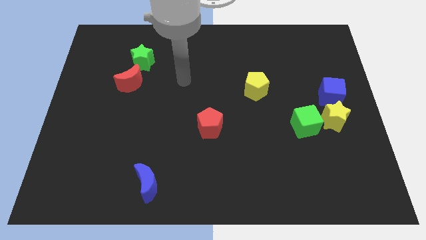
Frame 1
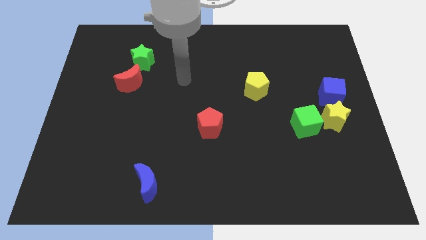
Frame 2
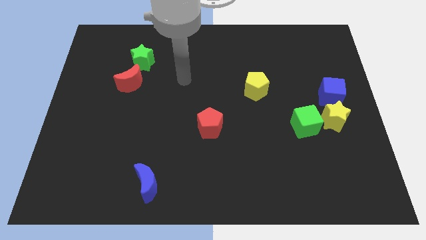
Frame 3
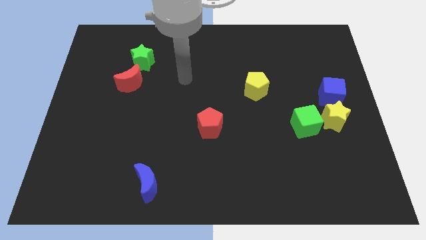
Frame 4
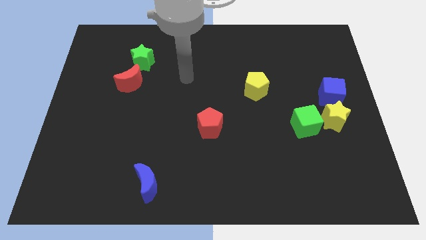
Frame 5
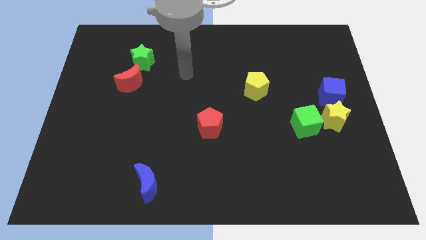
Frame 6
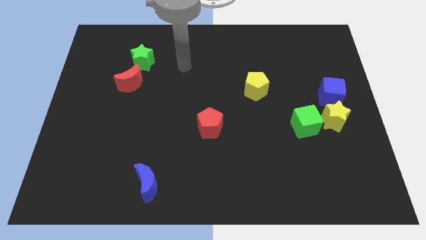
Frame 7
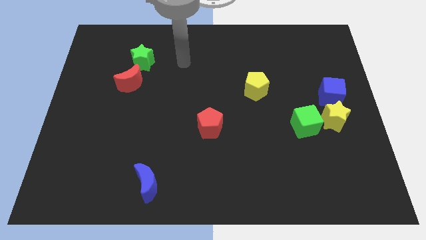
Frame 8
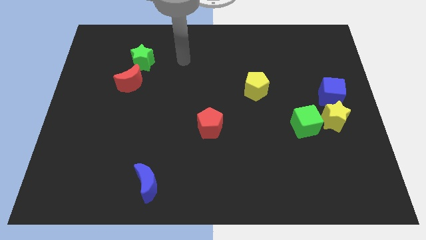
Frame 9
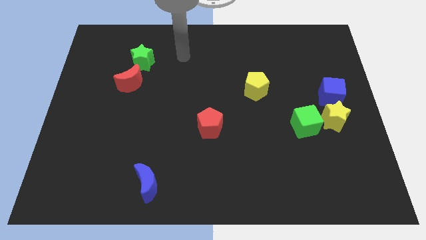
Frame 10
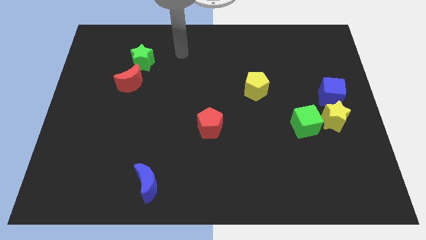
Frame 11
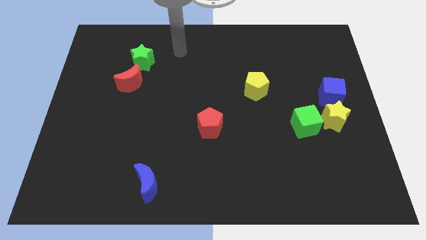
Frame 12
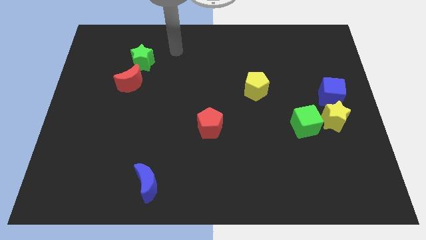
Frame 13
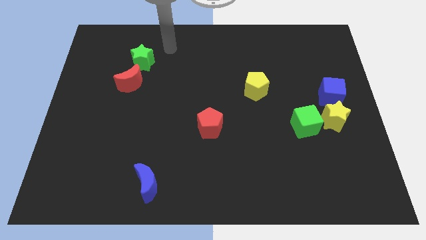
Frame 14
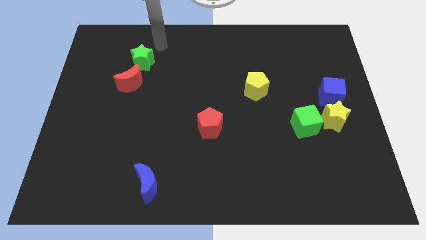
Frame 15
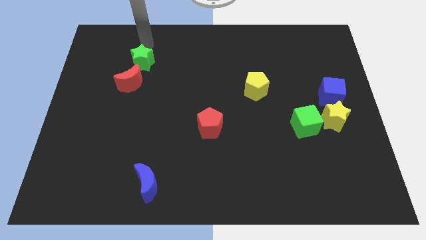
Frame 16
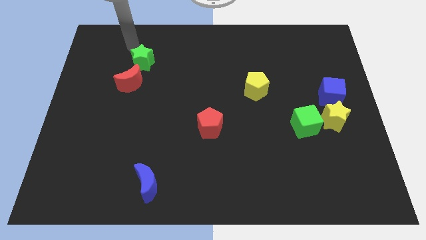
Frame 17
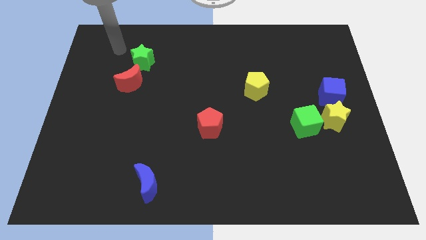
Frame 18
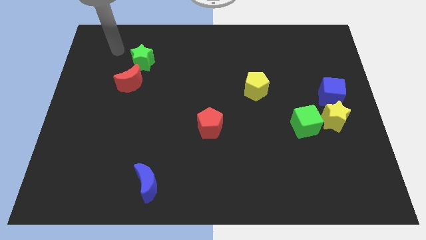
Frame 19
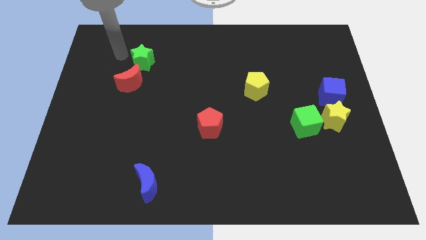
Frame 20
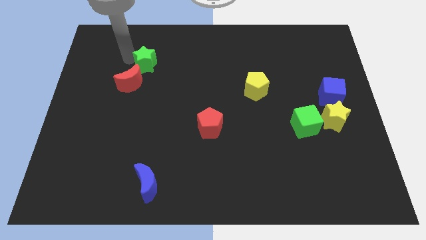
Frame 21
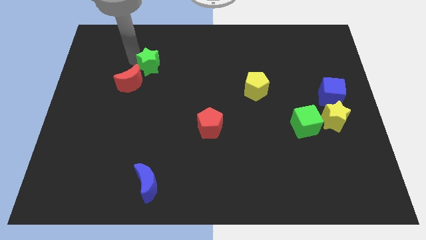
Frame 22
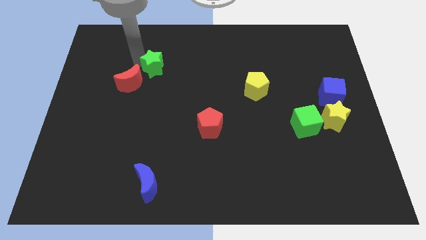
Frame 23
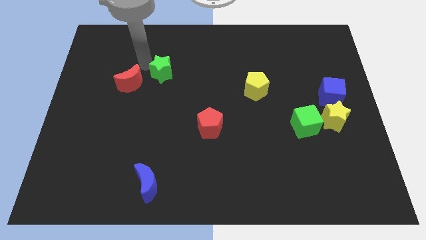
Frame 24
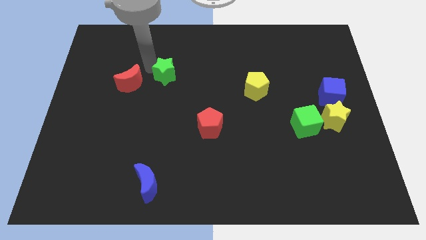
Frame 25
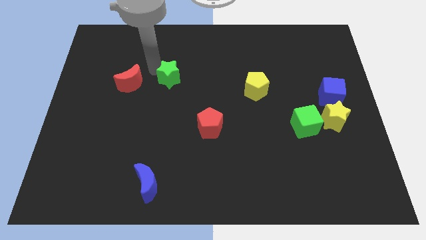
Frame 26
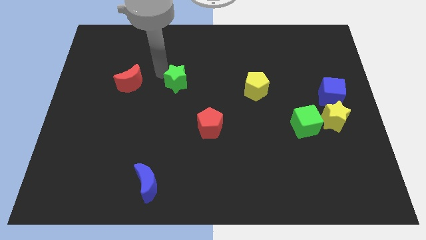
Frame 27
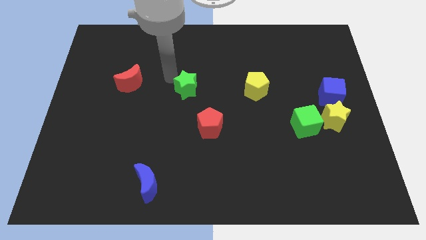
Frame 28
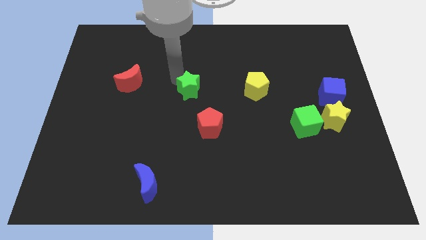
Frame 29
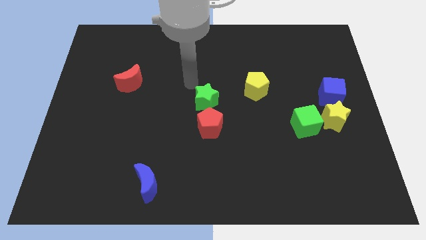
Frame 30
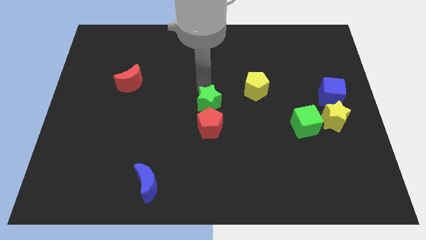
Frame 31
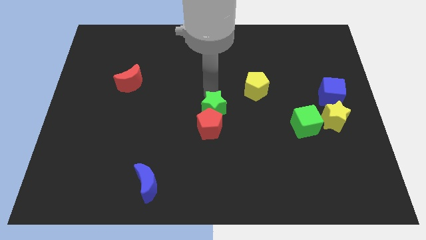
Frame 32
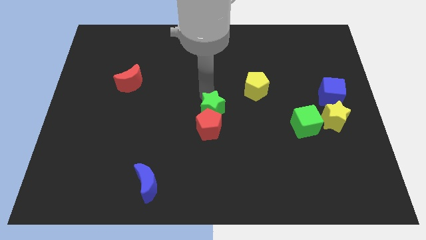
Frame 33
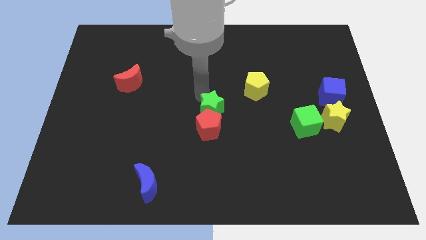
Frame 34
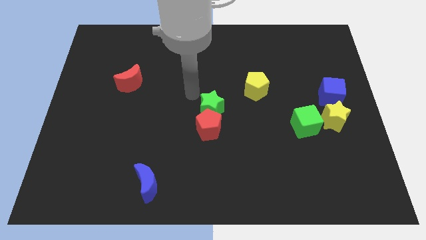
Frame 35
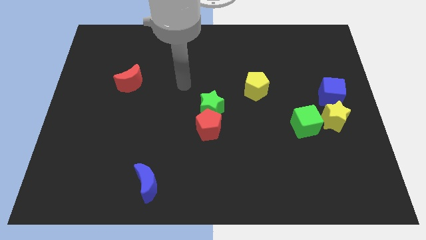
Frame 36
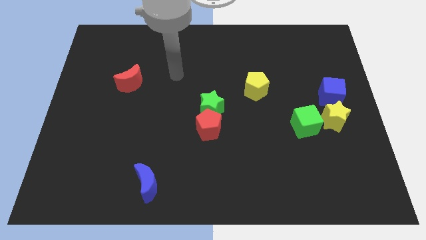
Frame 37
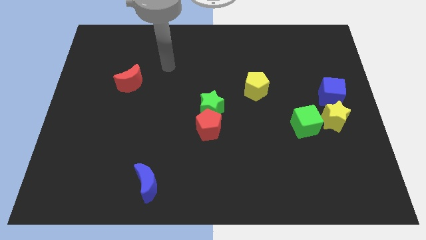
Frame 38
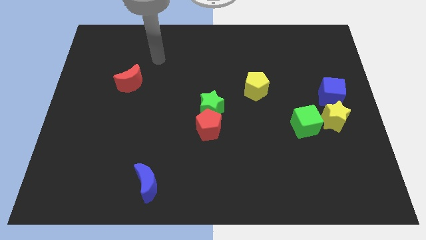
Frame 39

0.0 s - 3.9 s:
place the green star above the red pentagon

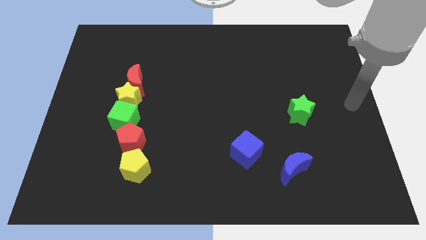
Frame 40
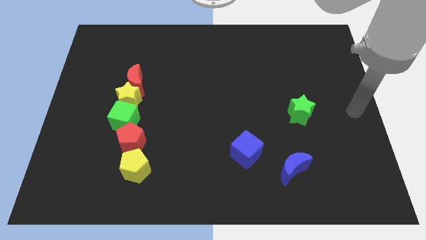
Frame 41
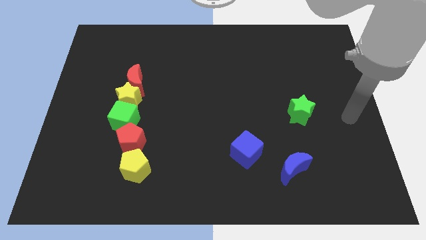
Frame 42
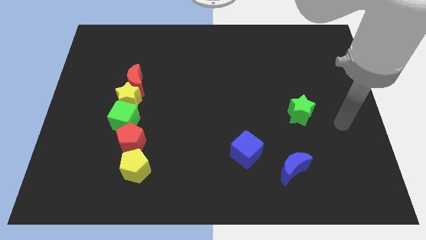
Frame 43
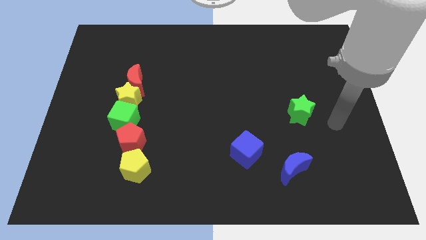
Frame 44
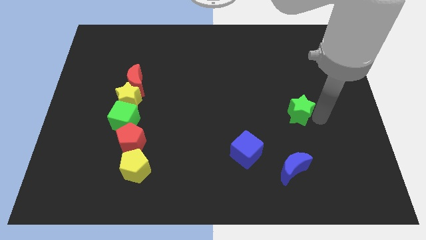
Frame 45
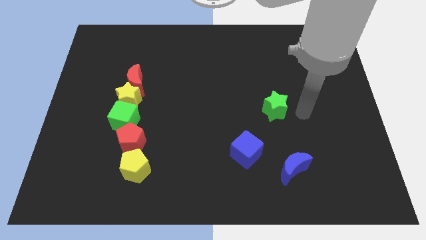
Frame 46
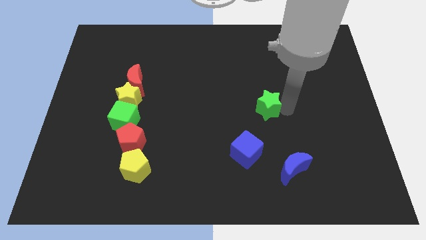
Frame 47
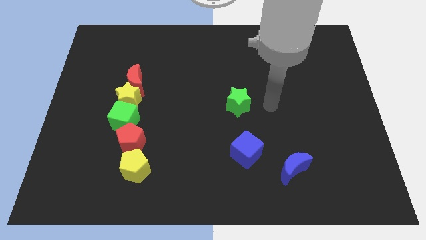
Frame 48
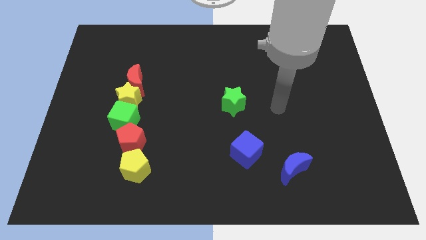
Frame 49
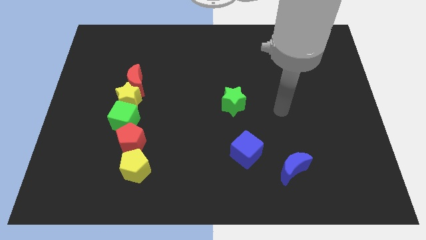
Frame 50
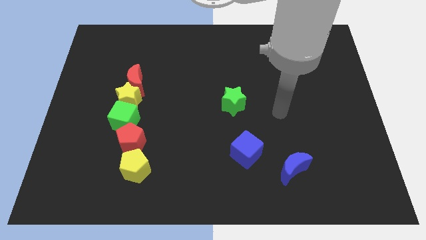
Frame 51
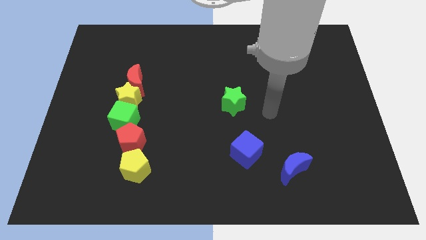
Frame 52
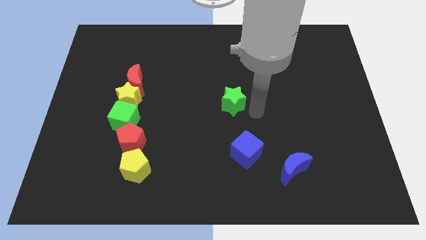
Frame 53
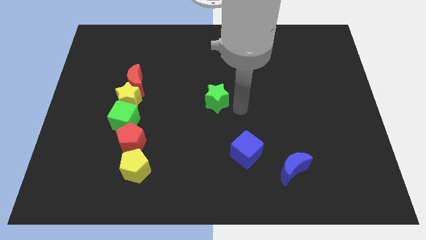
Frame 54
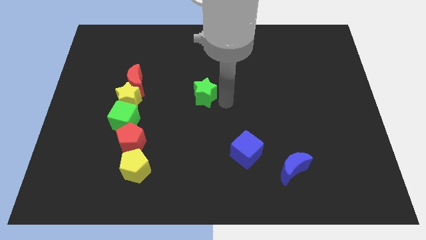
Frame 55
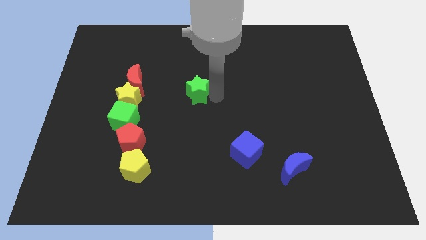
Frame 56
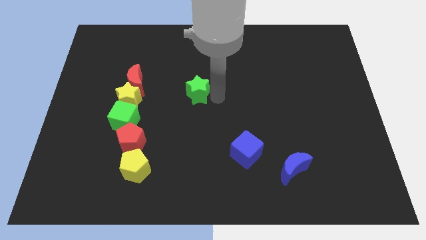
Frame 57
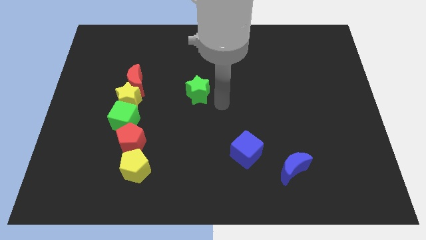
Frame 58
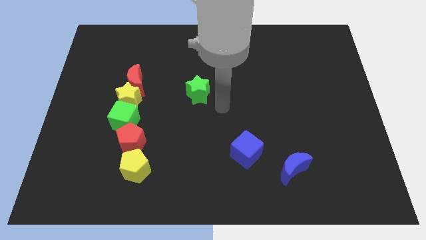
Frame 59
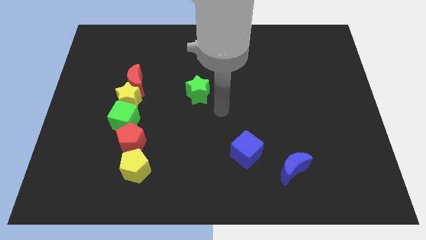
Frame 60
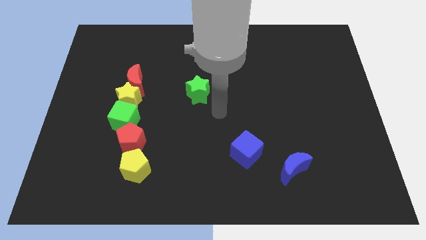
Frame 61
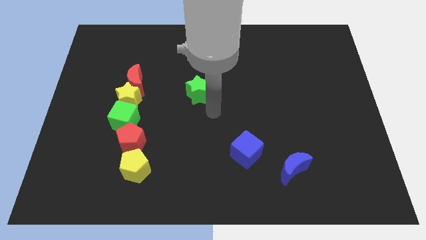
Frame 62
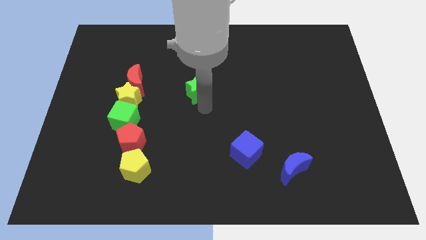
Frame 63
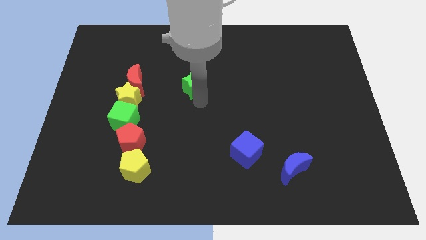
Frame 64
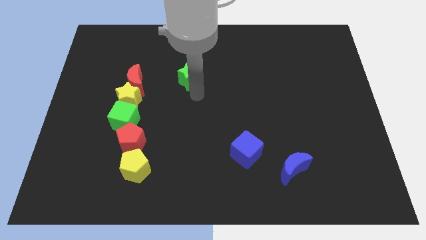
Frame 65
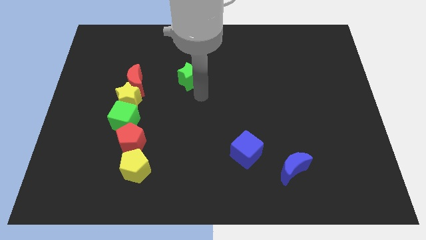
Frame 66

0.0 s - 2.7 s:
put the green star horizontally right to the red moon

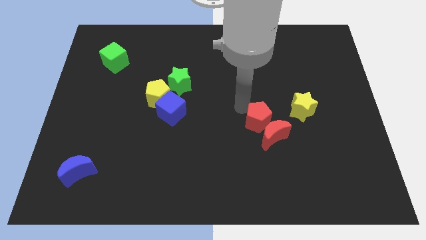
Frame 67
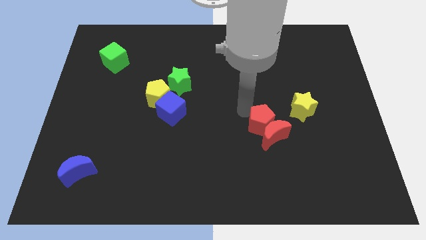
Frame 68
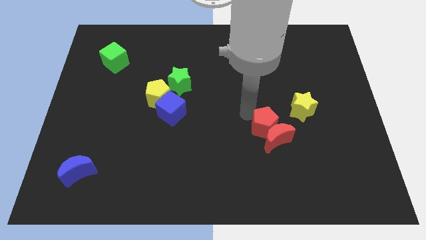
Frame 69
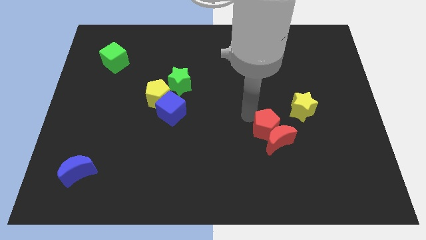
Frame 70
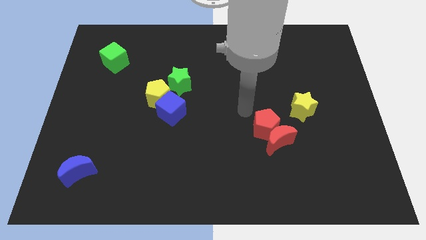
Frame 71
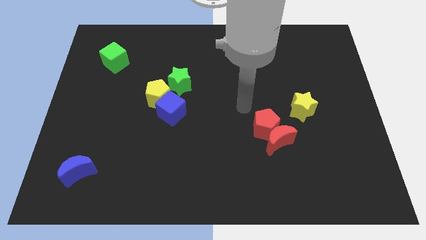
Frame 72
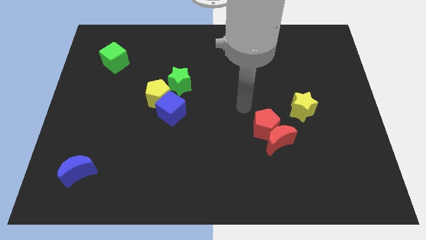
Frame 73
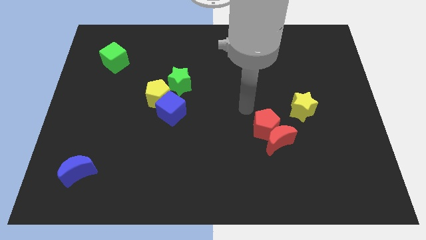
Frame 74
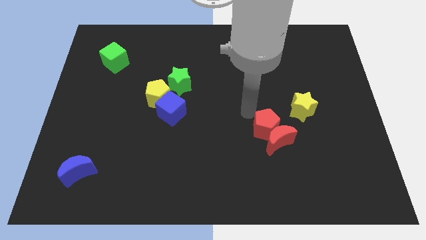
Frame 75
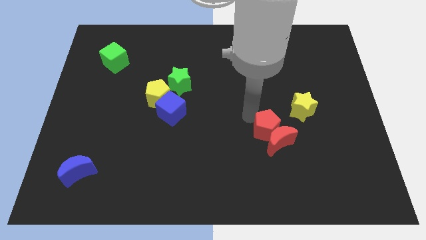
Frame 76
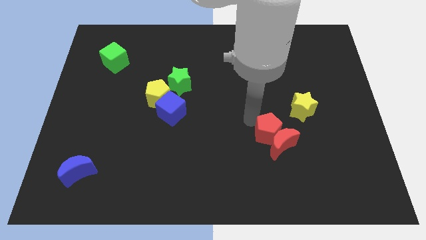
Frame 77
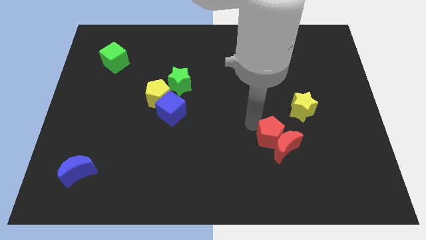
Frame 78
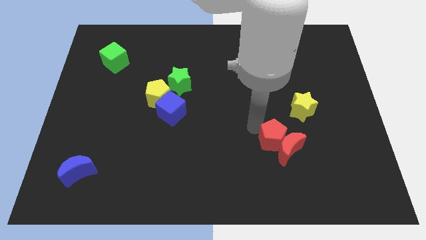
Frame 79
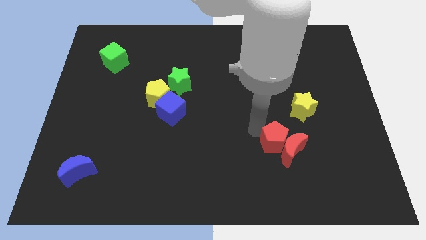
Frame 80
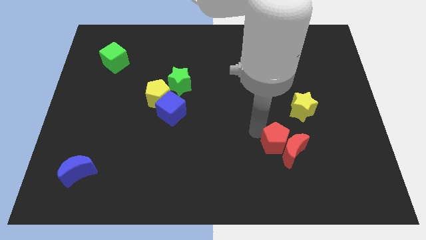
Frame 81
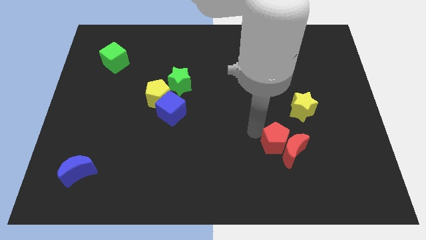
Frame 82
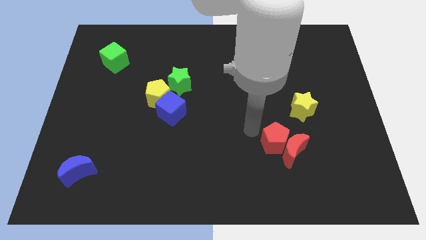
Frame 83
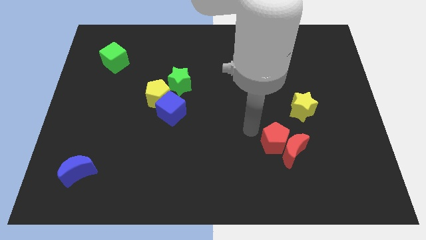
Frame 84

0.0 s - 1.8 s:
push the red pentagon along with red crescent

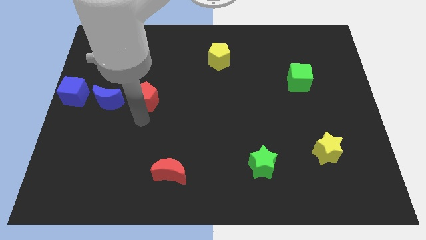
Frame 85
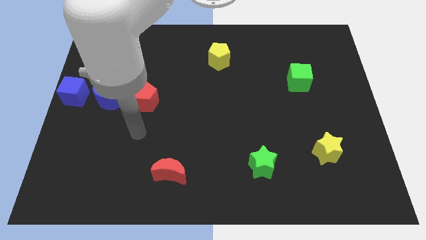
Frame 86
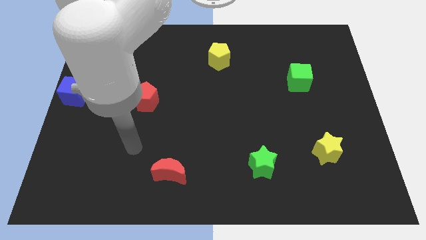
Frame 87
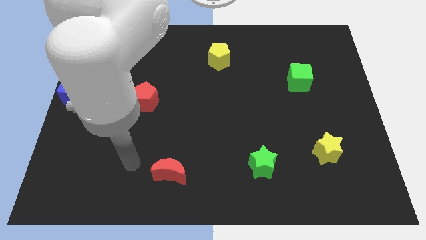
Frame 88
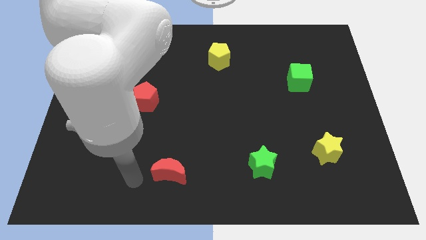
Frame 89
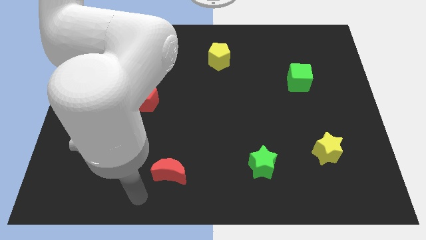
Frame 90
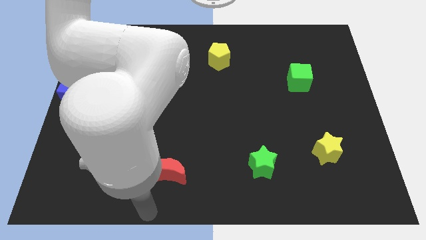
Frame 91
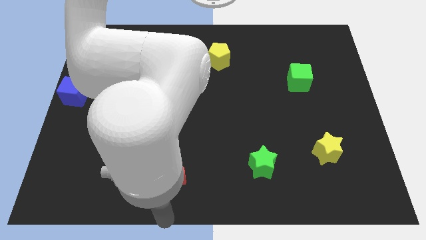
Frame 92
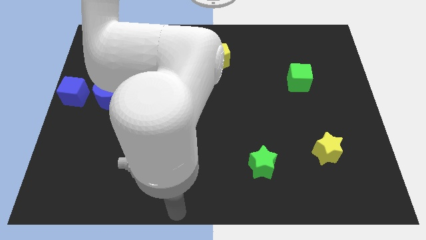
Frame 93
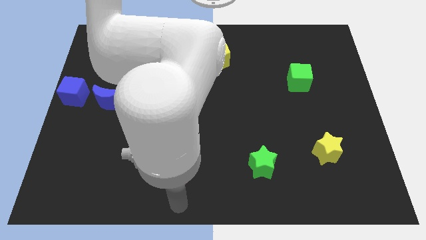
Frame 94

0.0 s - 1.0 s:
move away from the red pentagon
